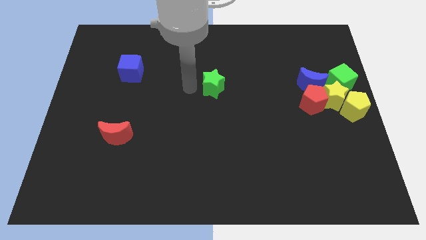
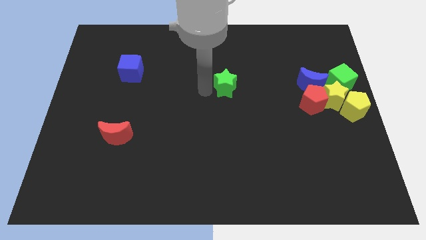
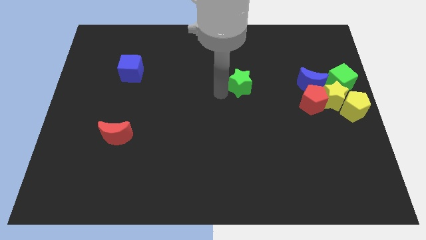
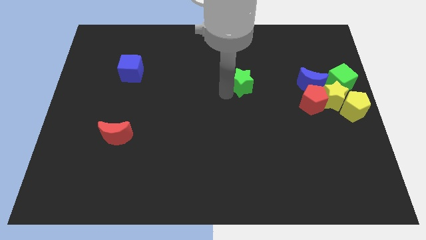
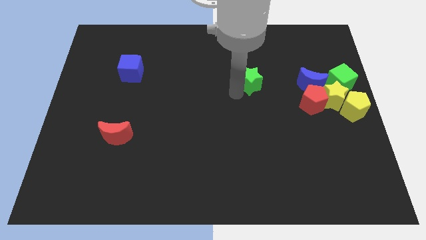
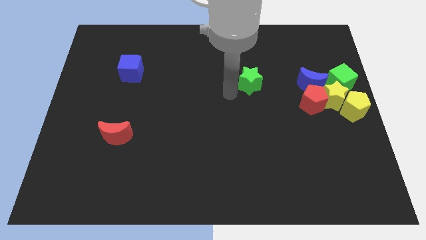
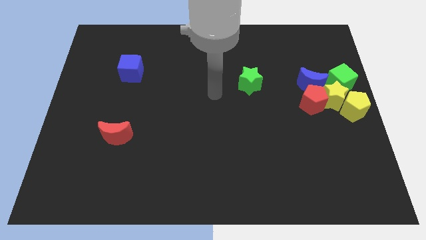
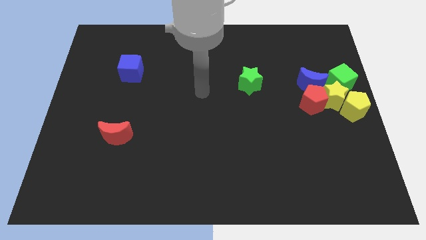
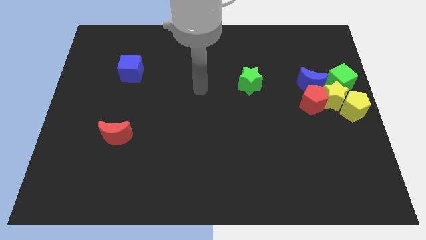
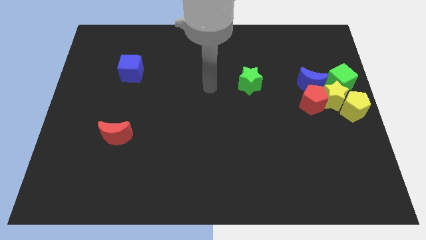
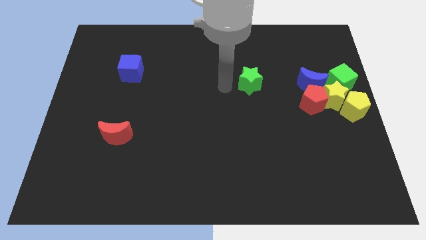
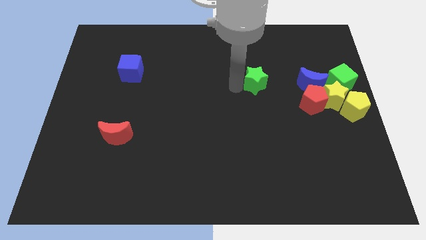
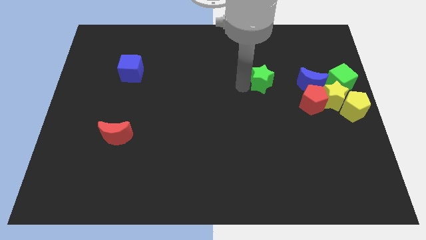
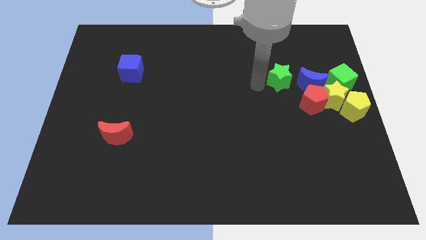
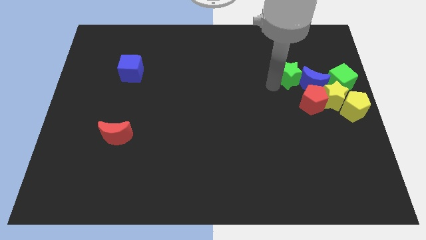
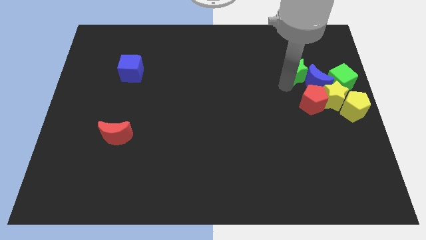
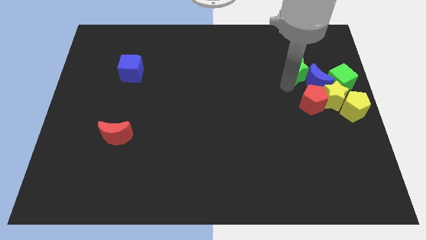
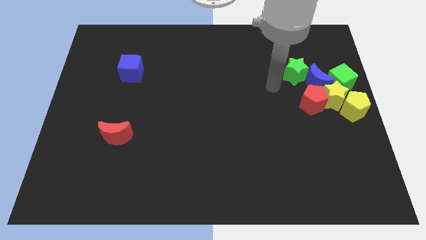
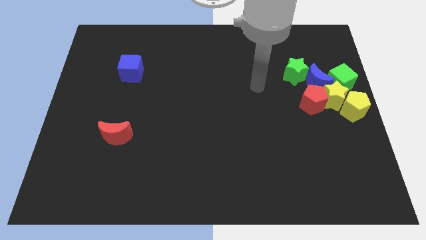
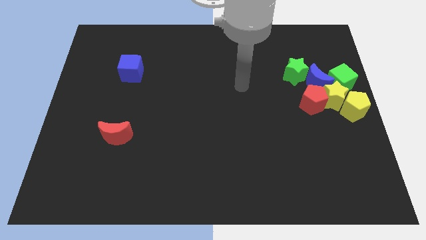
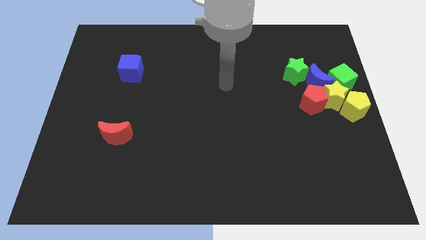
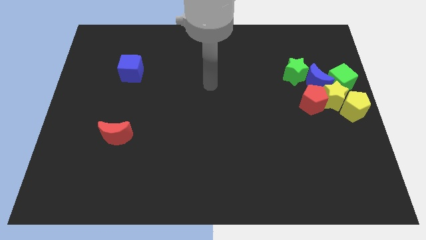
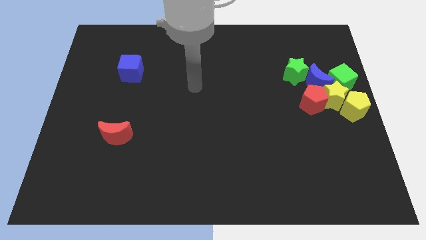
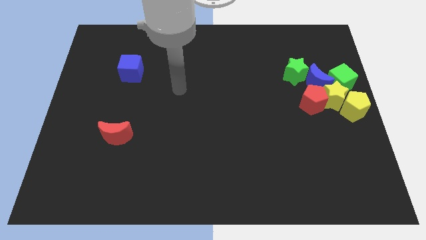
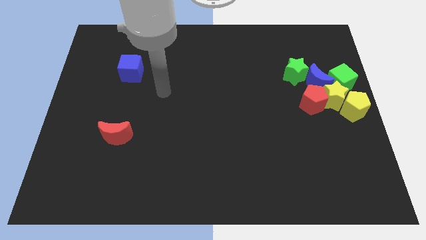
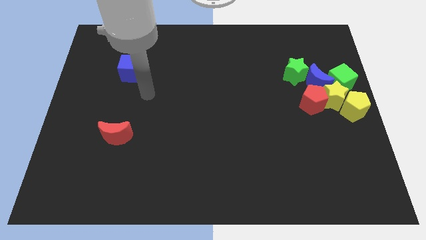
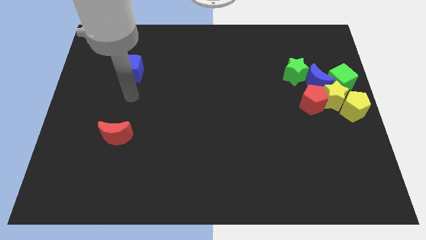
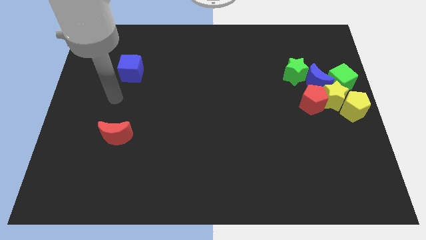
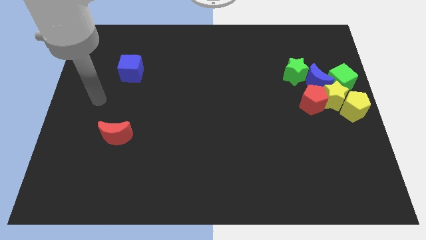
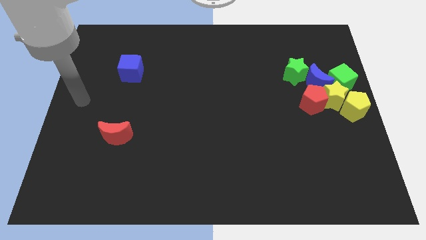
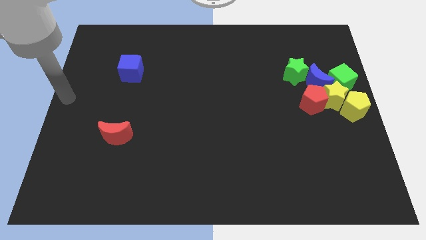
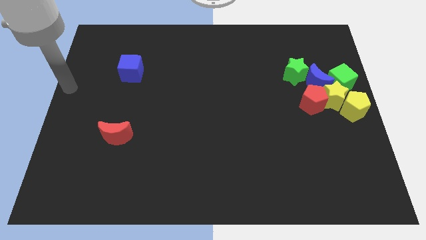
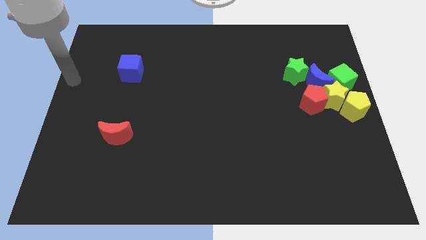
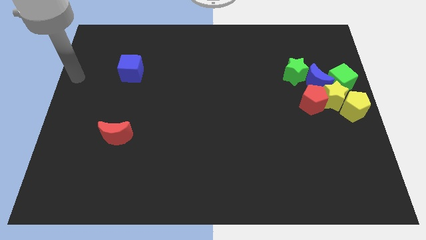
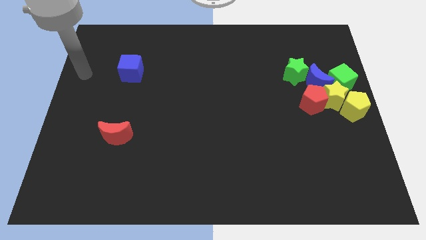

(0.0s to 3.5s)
move green star to the left of blue crescent

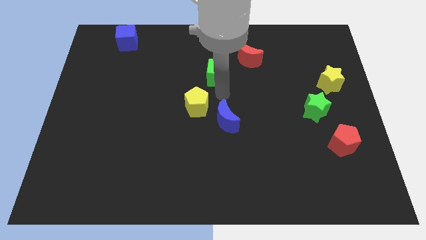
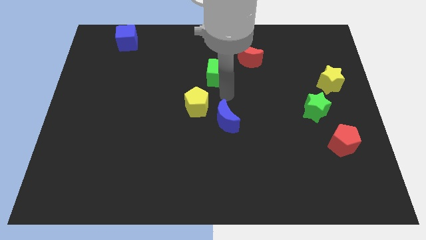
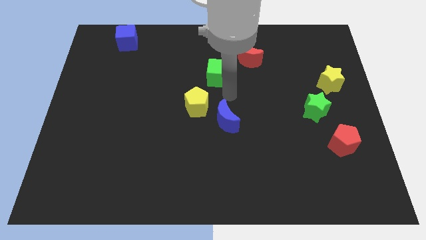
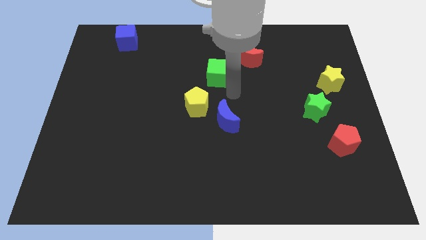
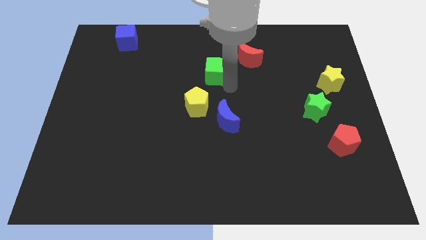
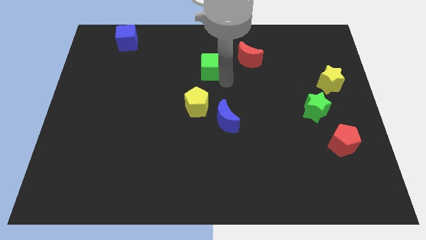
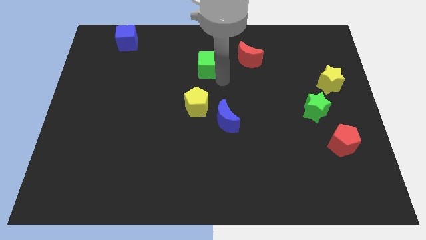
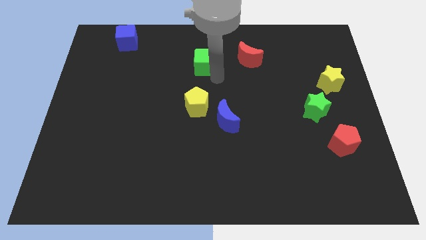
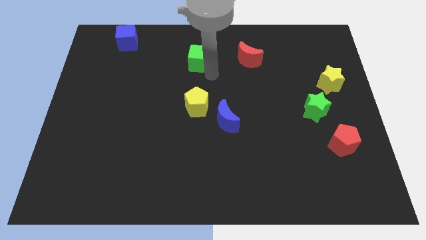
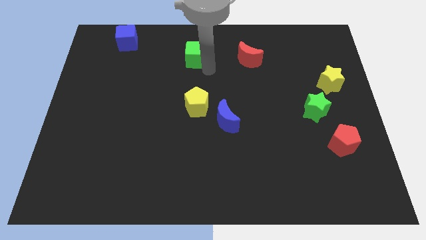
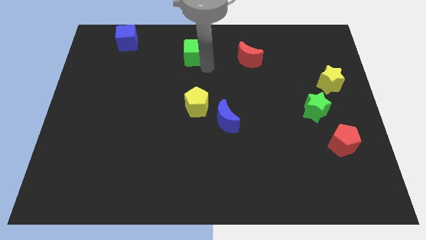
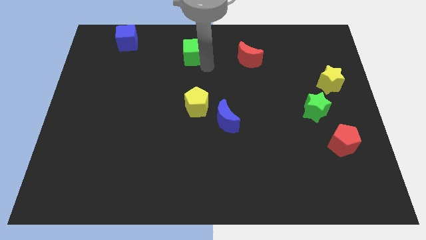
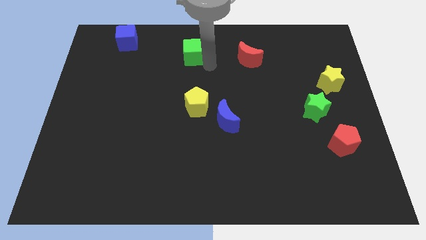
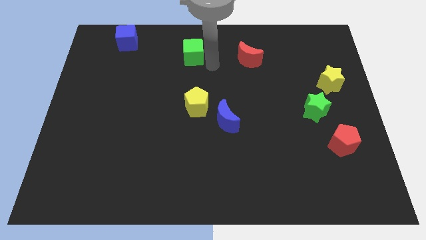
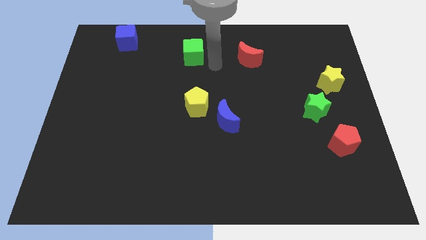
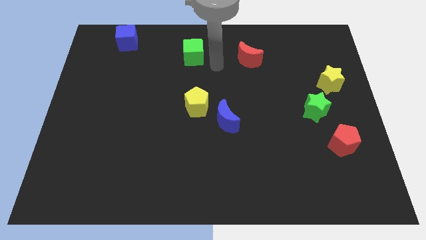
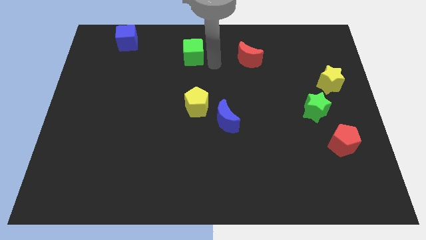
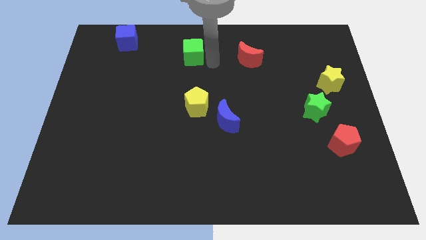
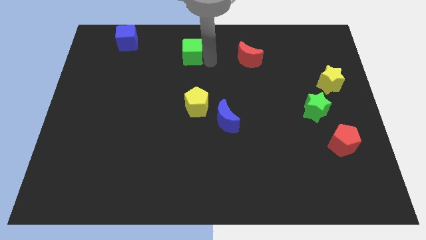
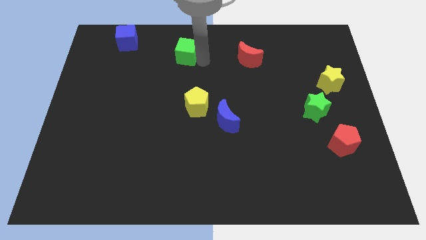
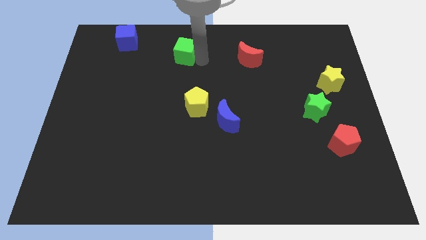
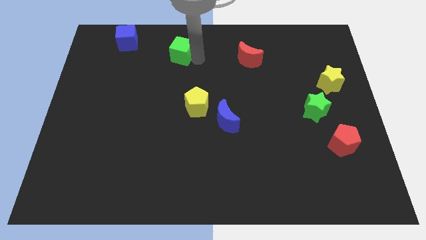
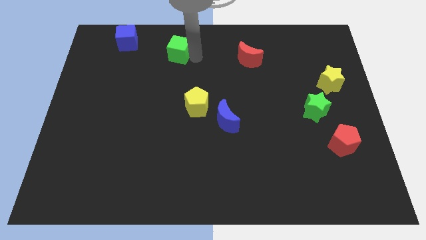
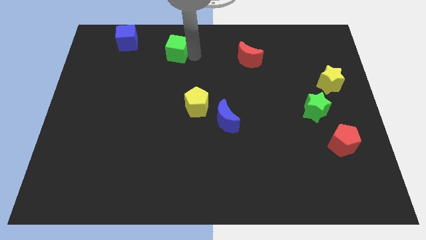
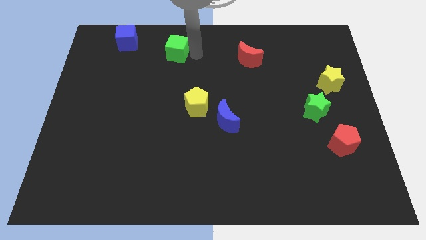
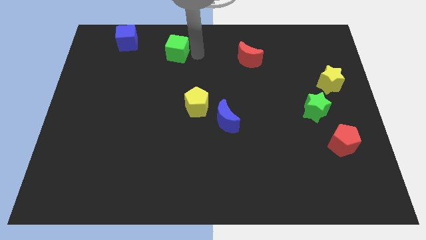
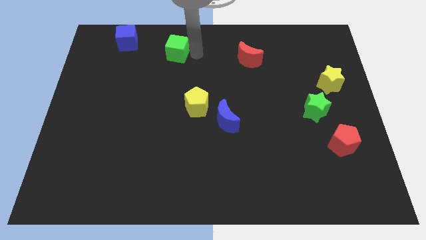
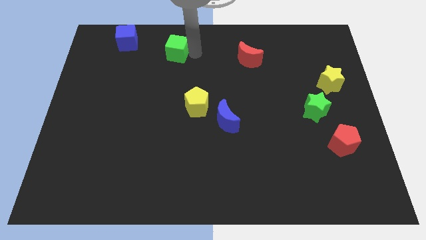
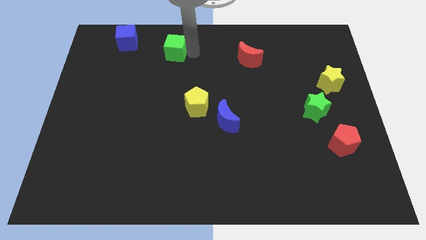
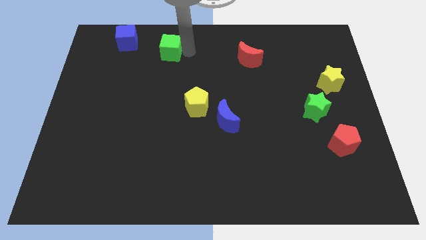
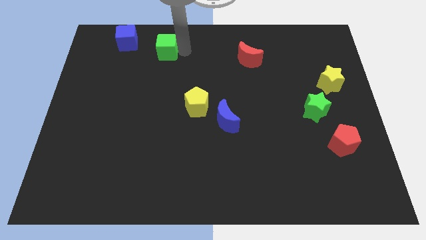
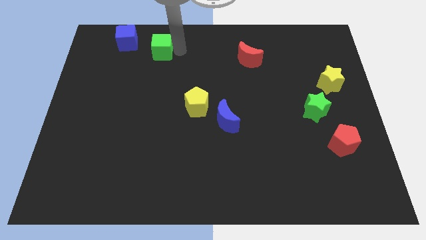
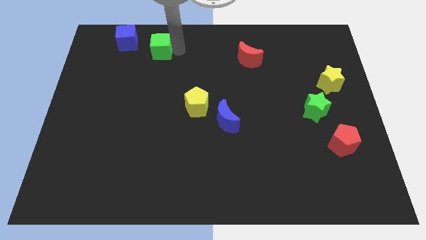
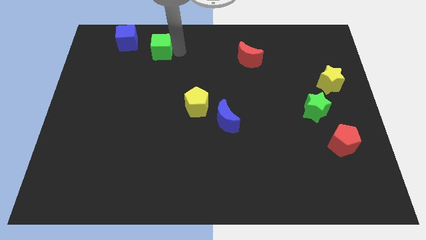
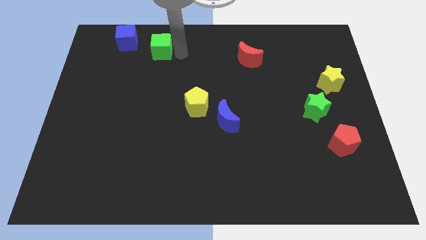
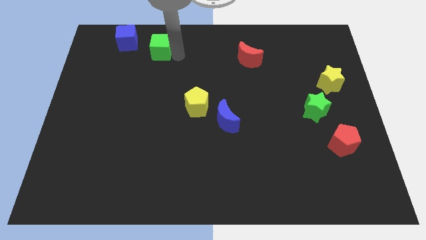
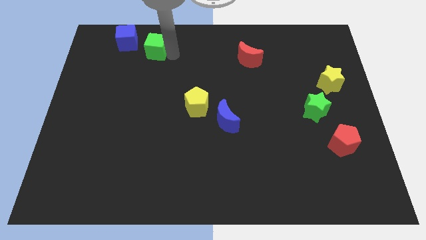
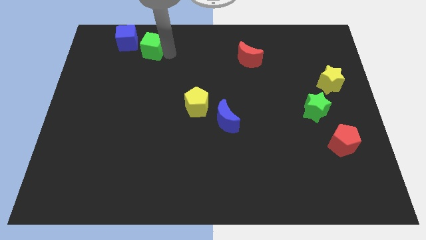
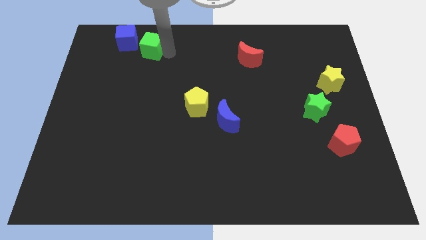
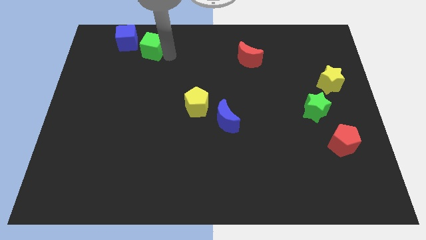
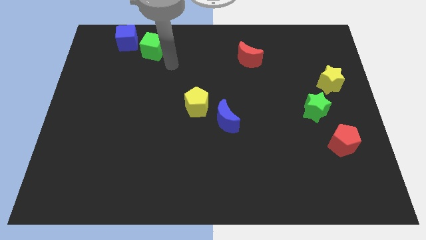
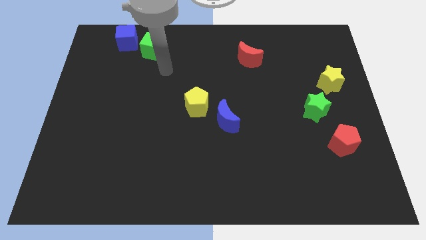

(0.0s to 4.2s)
push the green cube diagonally to the right if the blue cube

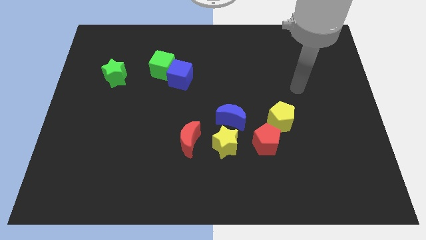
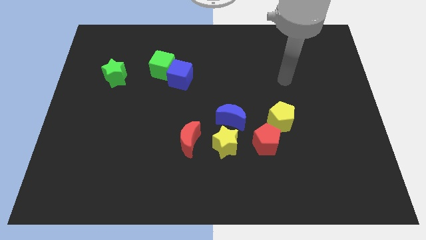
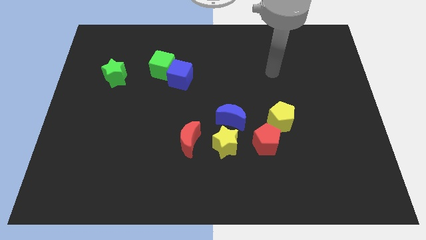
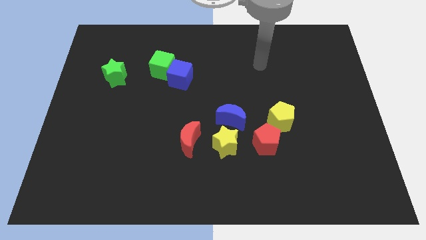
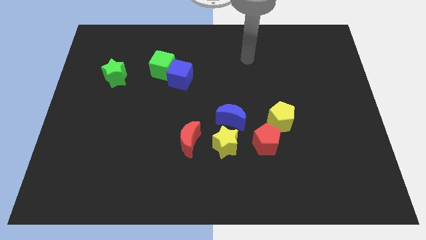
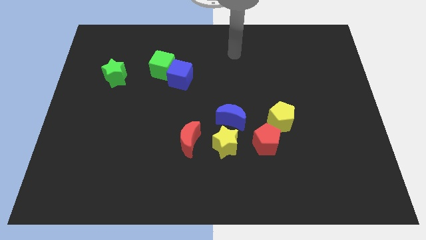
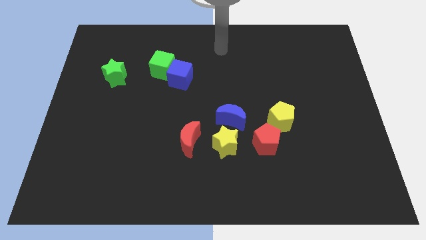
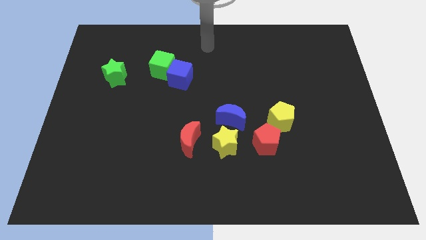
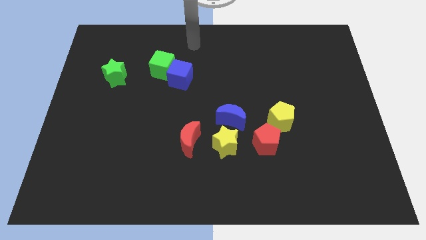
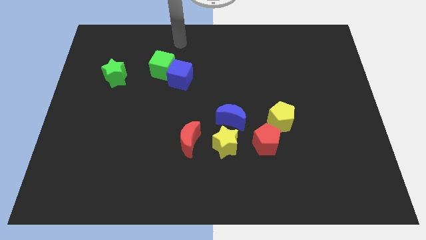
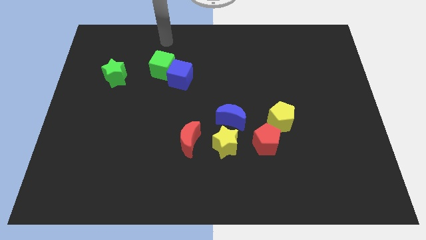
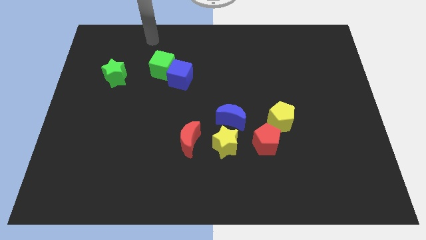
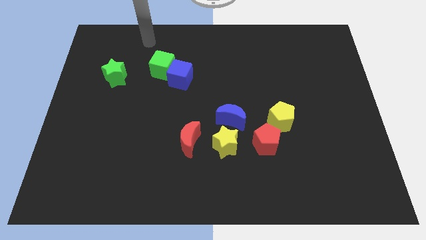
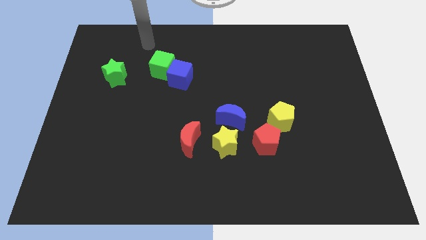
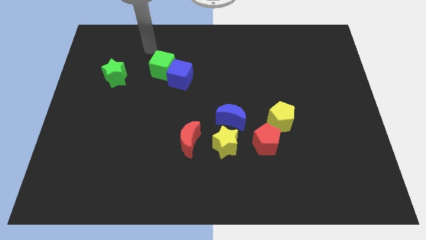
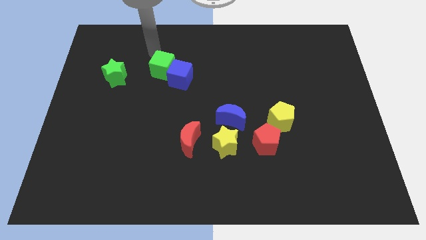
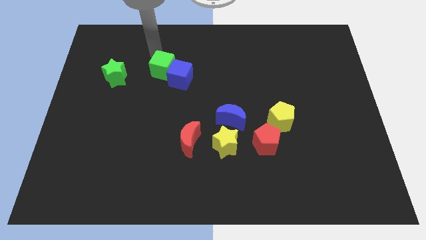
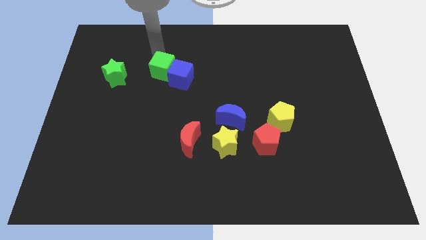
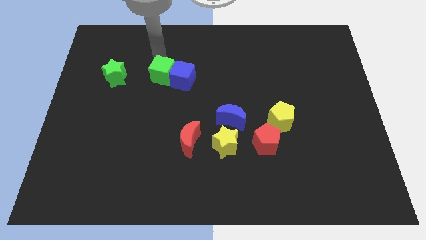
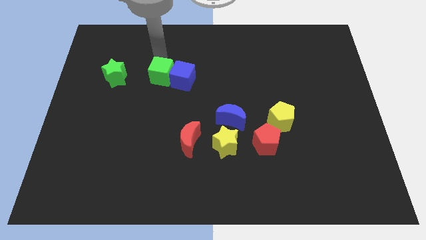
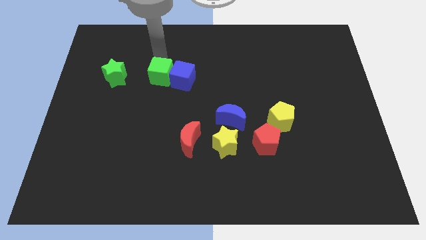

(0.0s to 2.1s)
slide green cube to the right of green star
